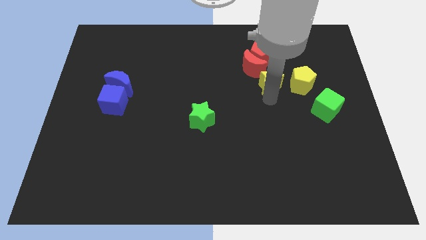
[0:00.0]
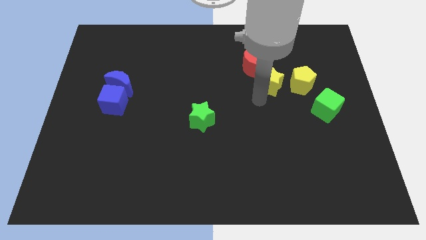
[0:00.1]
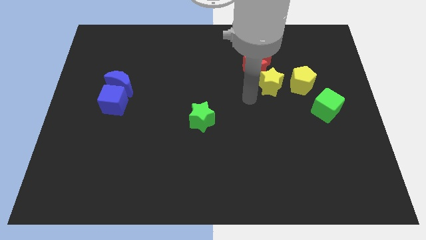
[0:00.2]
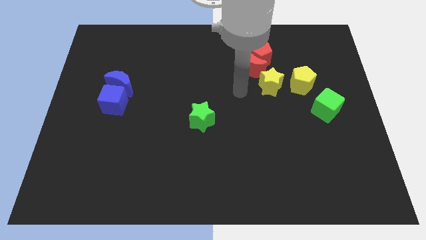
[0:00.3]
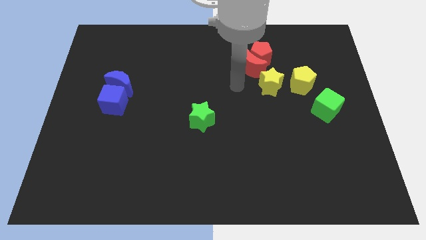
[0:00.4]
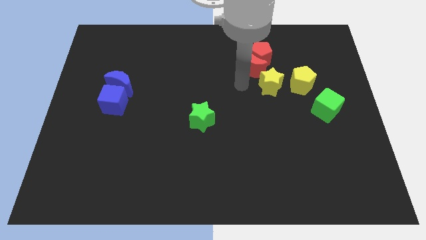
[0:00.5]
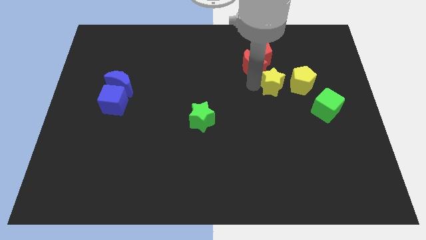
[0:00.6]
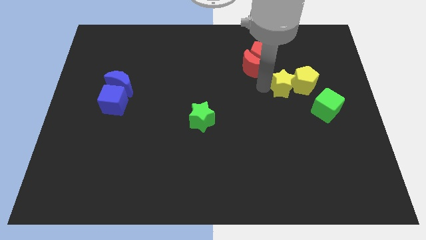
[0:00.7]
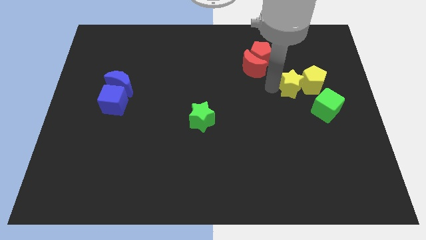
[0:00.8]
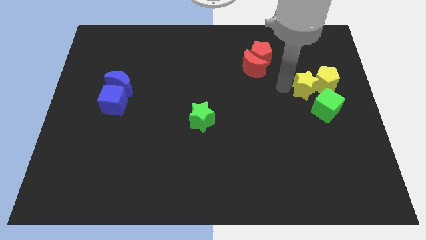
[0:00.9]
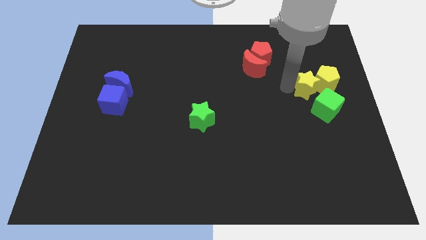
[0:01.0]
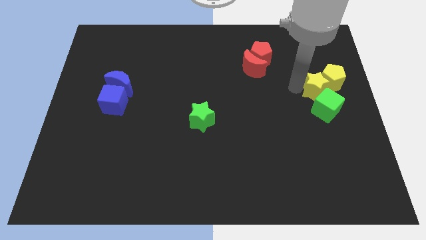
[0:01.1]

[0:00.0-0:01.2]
push yellow star above green cube

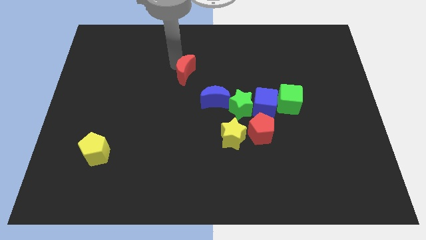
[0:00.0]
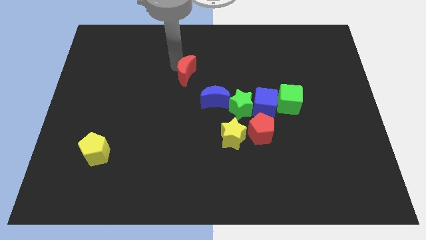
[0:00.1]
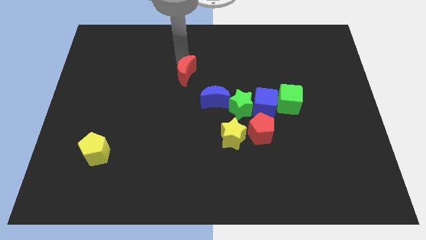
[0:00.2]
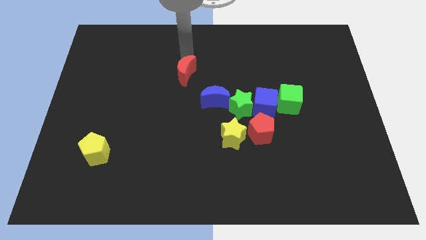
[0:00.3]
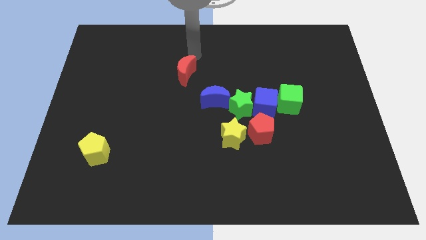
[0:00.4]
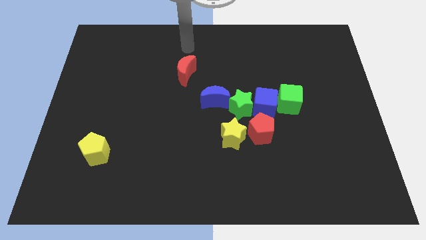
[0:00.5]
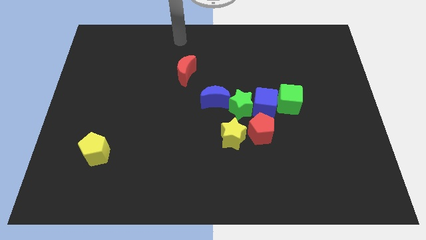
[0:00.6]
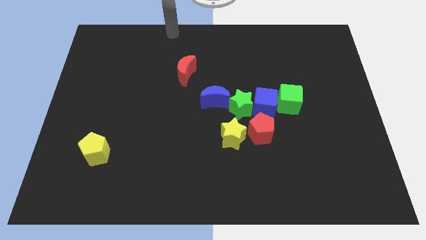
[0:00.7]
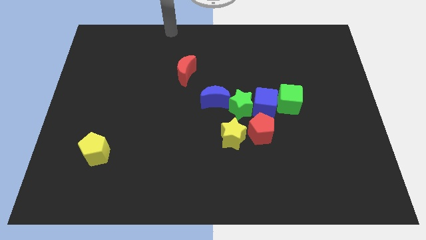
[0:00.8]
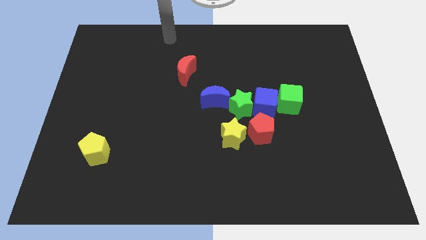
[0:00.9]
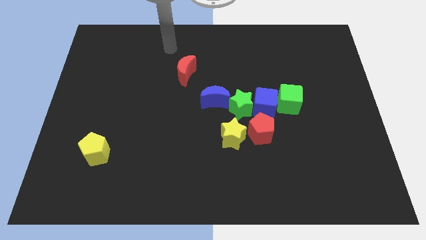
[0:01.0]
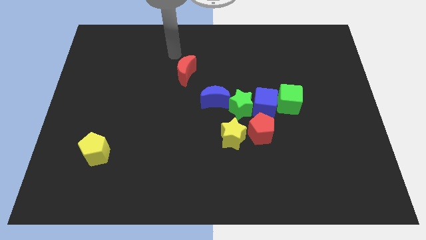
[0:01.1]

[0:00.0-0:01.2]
move your arm away from red moon

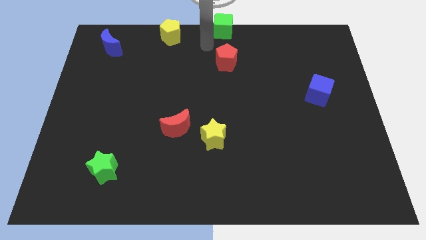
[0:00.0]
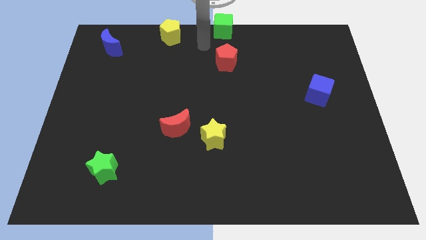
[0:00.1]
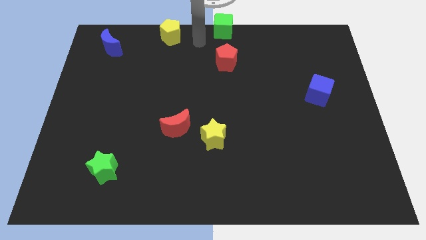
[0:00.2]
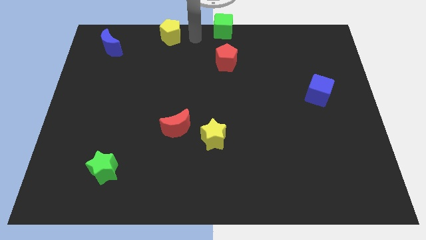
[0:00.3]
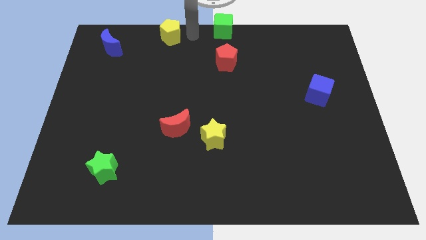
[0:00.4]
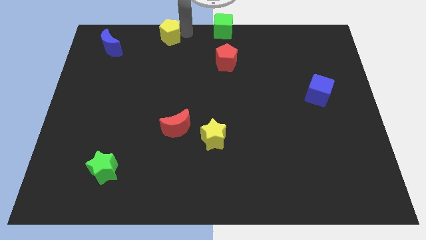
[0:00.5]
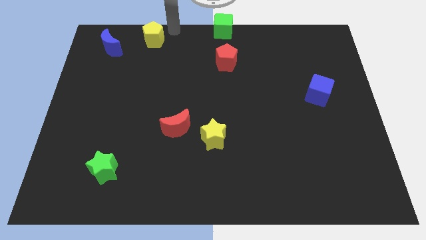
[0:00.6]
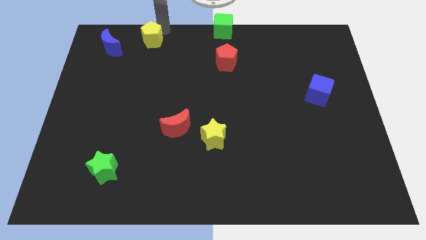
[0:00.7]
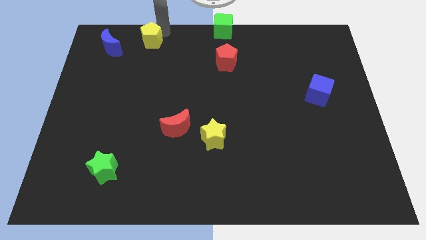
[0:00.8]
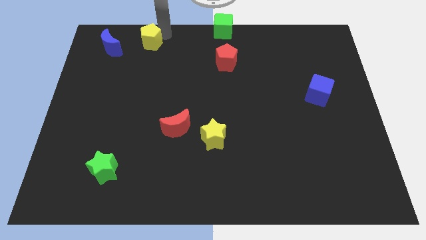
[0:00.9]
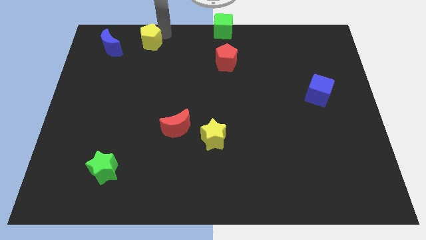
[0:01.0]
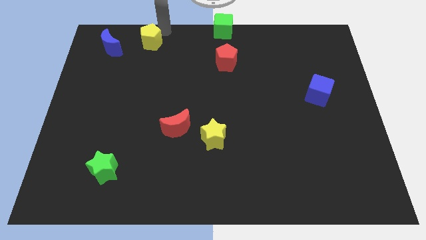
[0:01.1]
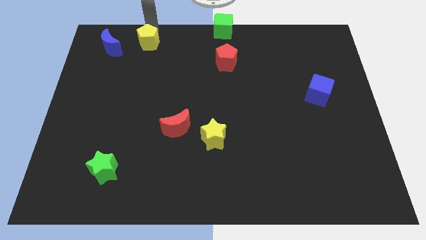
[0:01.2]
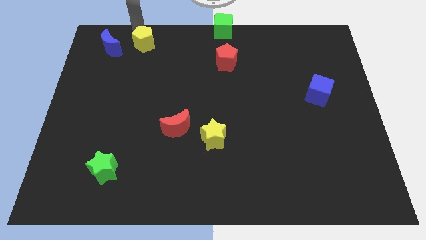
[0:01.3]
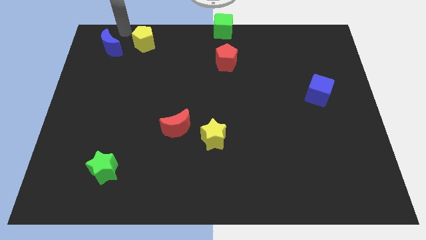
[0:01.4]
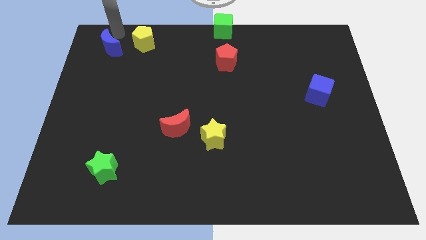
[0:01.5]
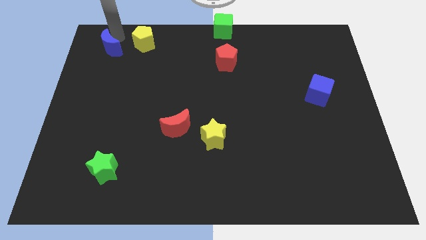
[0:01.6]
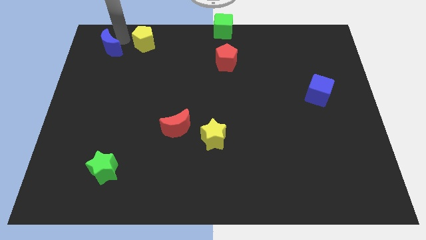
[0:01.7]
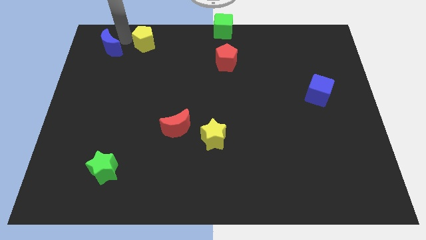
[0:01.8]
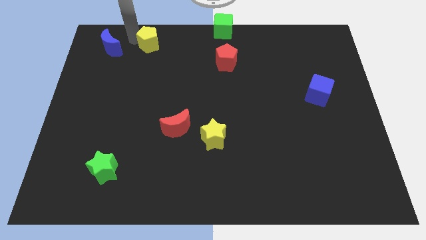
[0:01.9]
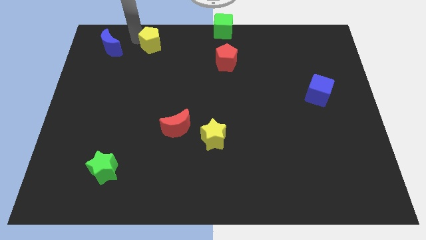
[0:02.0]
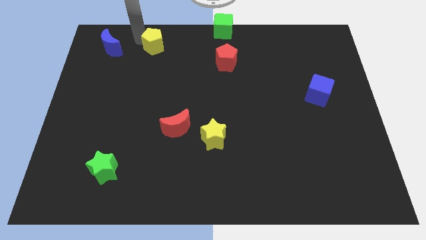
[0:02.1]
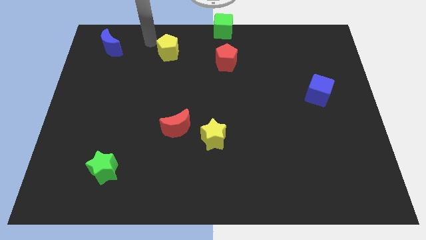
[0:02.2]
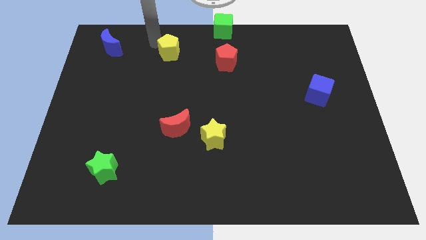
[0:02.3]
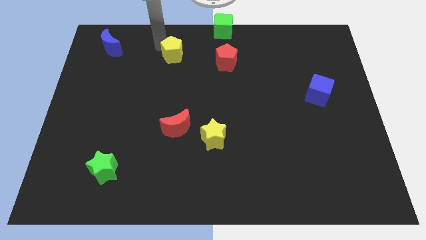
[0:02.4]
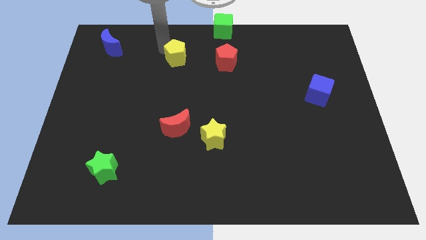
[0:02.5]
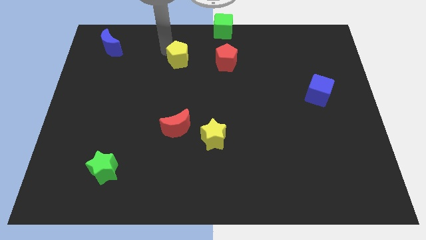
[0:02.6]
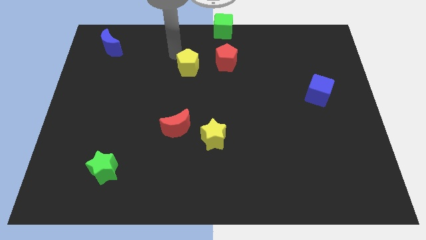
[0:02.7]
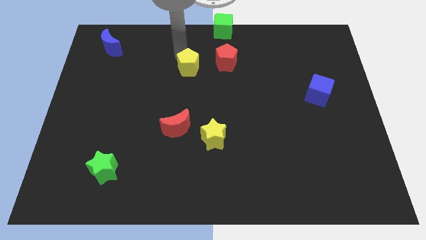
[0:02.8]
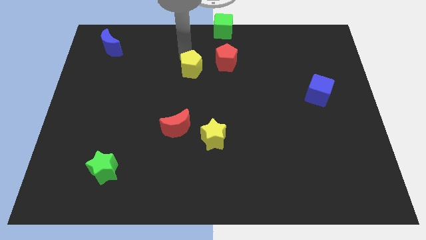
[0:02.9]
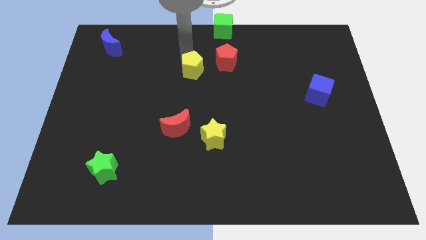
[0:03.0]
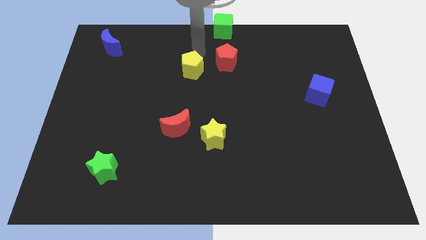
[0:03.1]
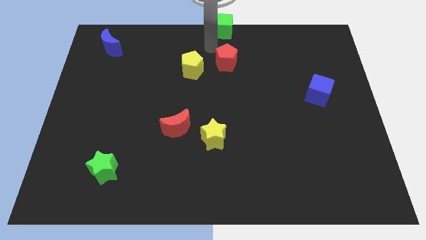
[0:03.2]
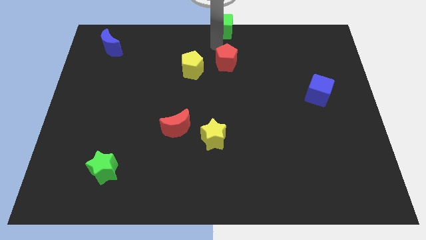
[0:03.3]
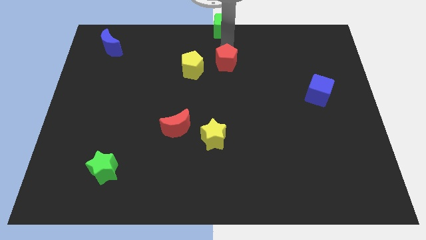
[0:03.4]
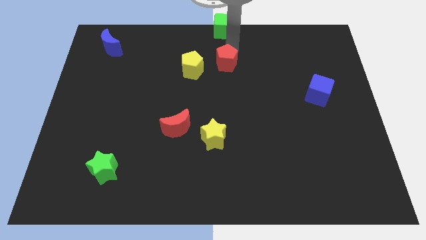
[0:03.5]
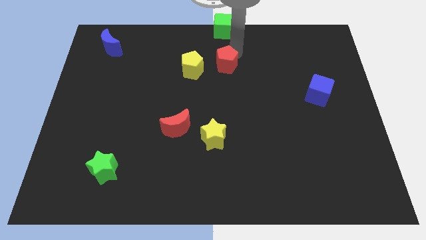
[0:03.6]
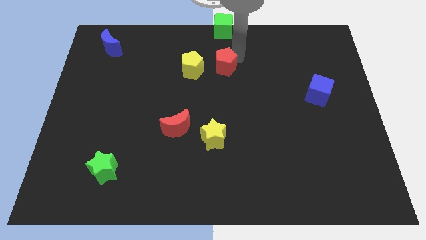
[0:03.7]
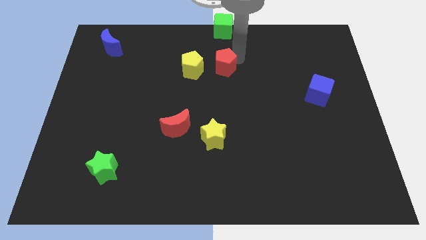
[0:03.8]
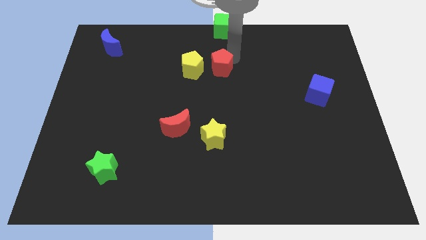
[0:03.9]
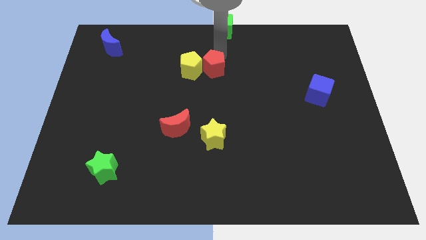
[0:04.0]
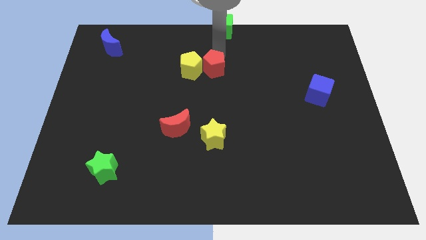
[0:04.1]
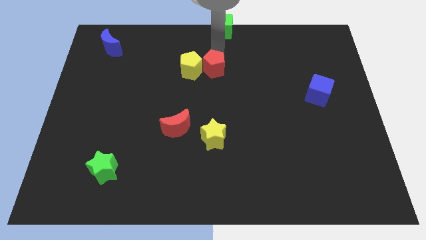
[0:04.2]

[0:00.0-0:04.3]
place the yellow pentagon and red pentagon together

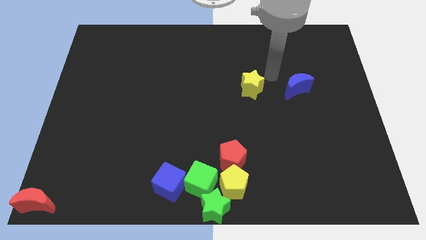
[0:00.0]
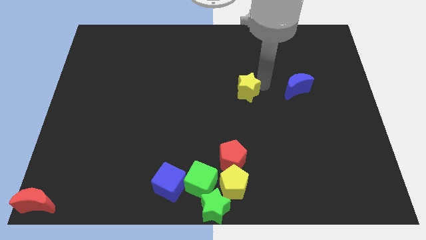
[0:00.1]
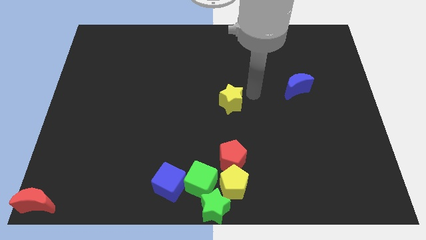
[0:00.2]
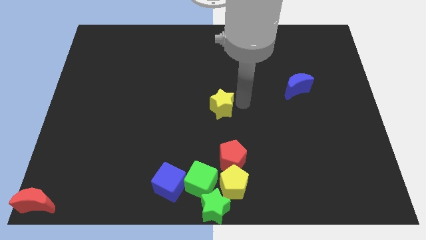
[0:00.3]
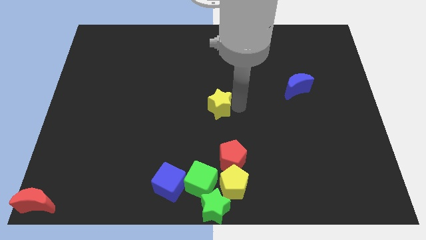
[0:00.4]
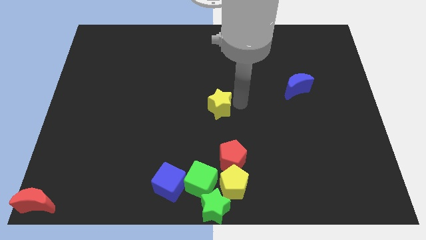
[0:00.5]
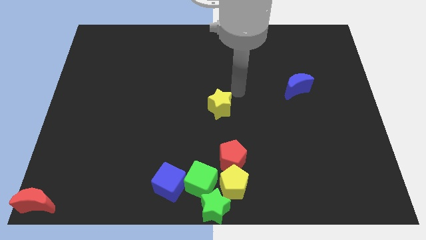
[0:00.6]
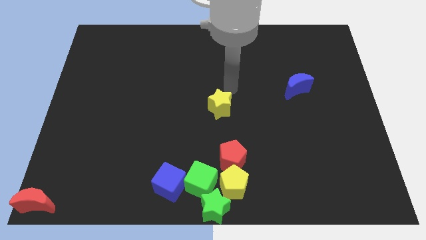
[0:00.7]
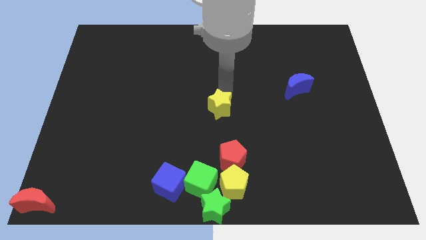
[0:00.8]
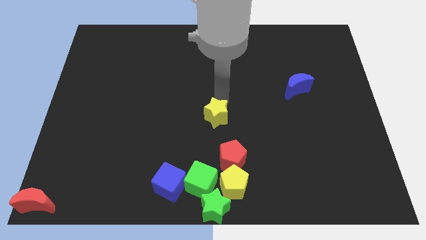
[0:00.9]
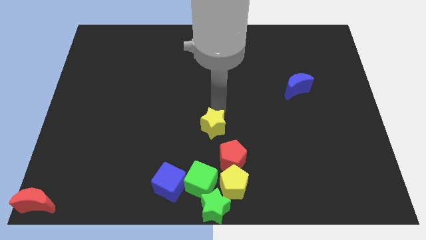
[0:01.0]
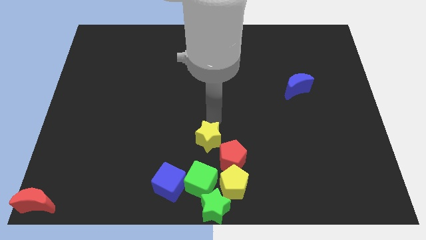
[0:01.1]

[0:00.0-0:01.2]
move the yellow star left above red pentagon

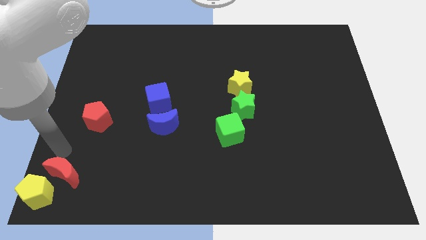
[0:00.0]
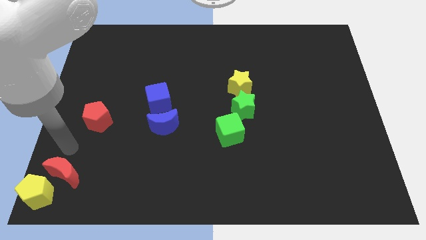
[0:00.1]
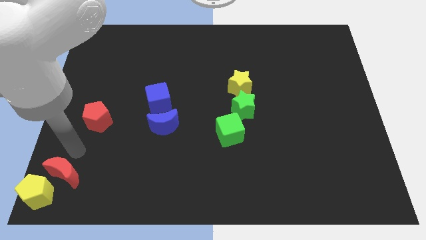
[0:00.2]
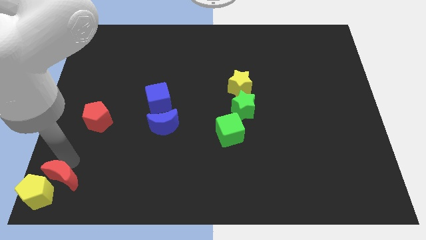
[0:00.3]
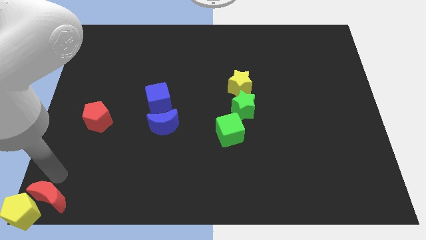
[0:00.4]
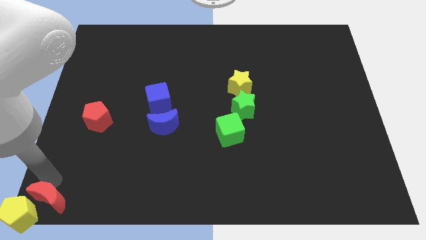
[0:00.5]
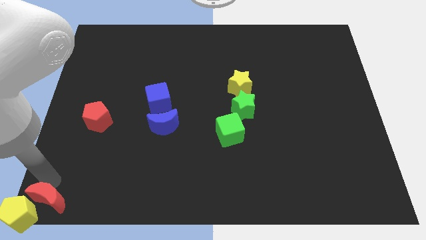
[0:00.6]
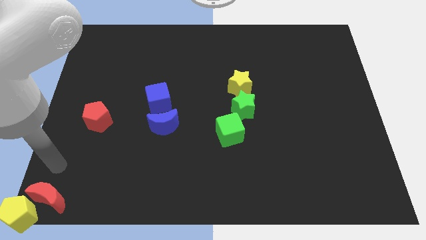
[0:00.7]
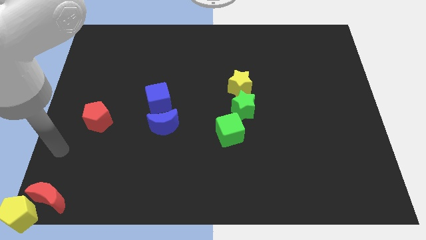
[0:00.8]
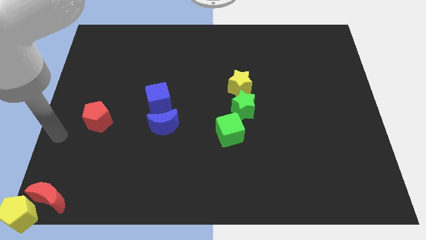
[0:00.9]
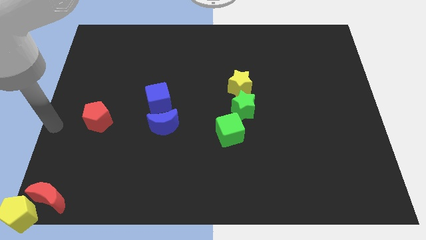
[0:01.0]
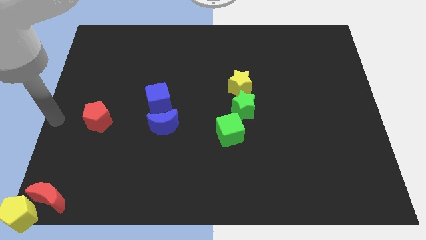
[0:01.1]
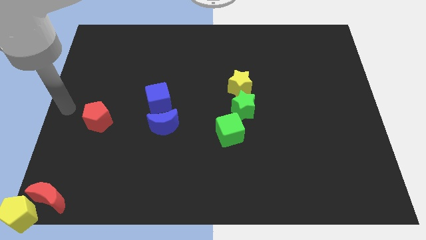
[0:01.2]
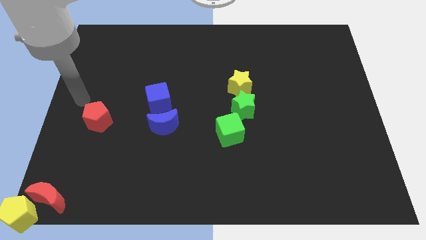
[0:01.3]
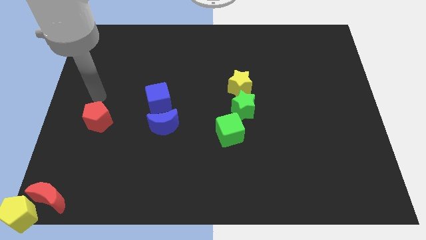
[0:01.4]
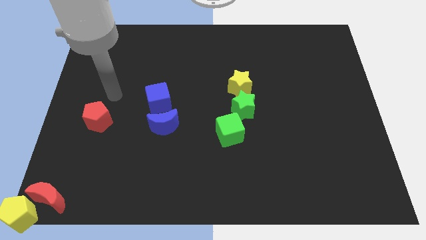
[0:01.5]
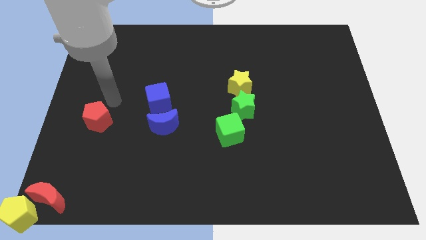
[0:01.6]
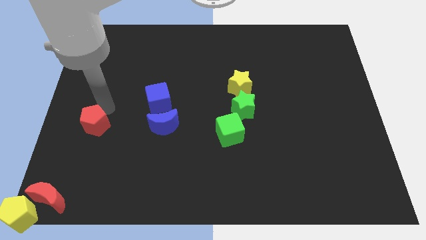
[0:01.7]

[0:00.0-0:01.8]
push the red crescent into the yellow block
